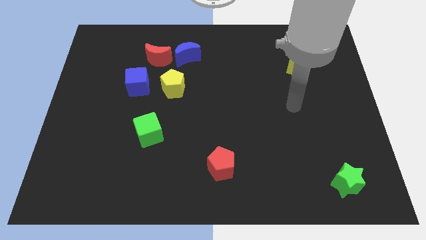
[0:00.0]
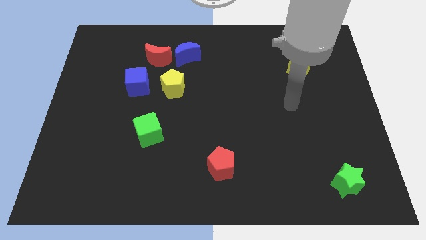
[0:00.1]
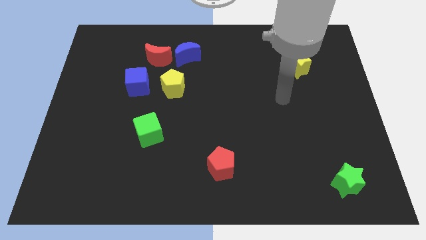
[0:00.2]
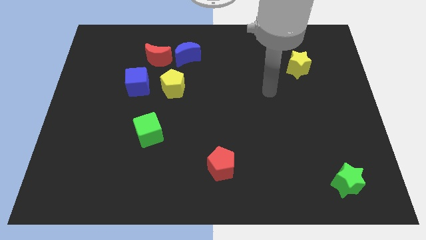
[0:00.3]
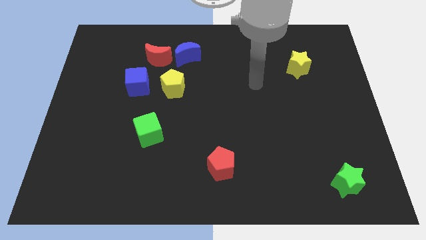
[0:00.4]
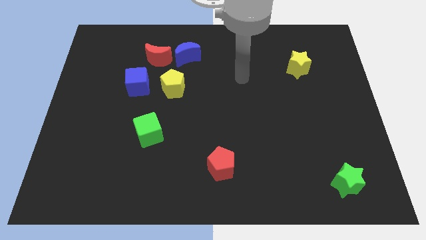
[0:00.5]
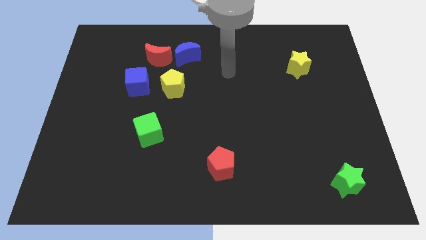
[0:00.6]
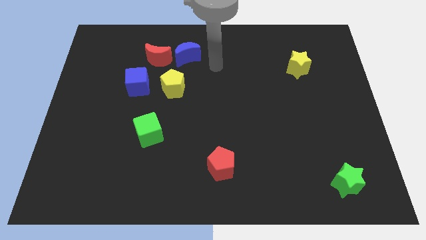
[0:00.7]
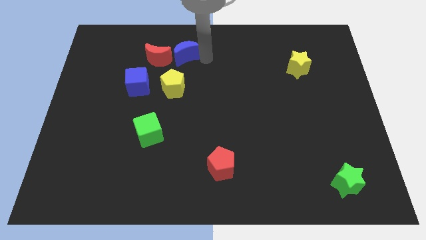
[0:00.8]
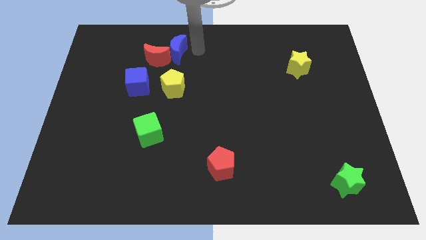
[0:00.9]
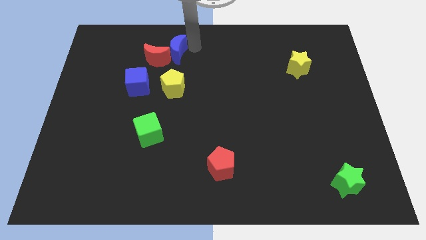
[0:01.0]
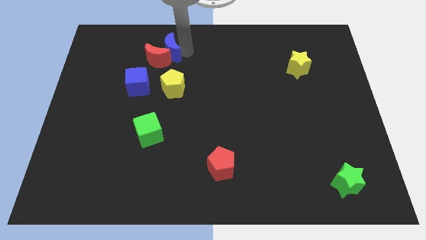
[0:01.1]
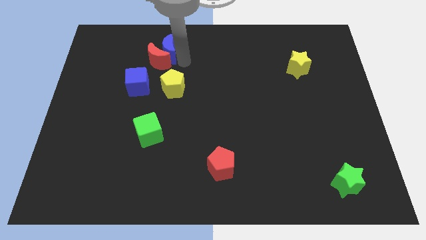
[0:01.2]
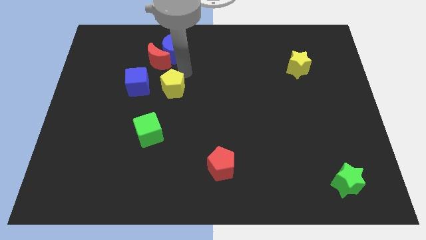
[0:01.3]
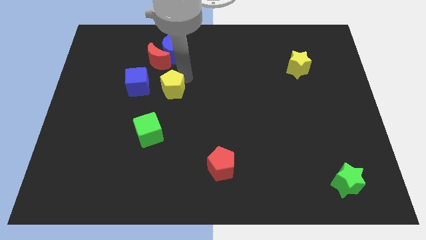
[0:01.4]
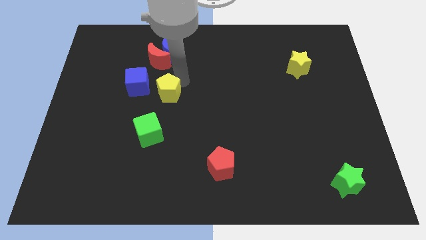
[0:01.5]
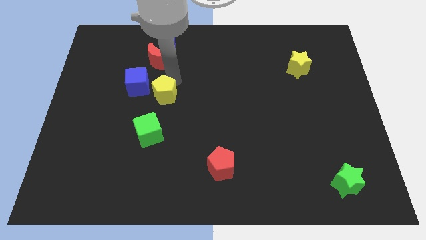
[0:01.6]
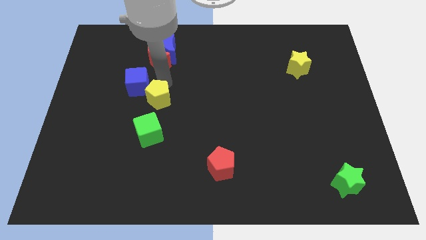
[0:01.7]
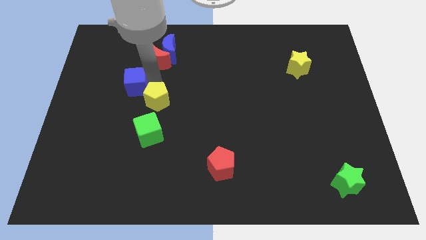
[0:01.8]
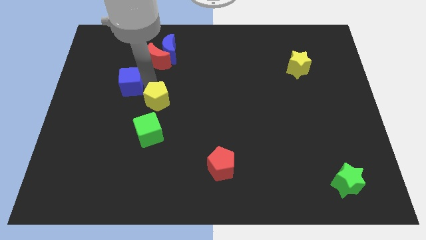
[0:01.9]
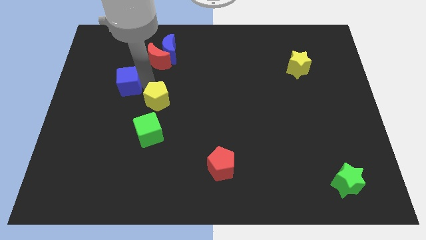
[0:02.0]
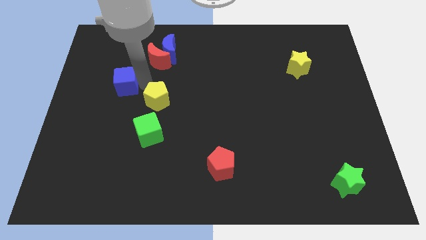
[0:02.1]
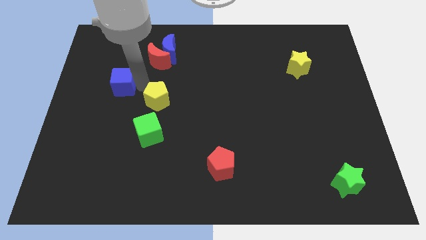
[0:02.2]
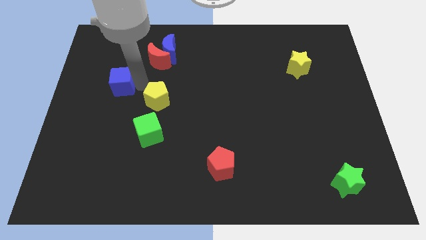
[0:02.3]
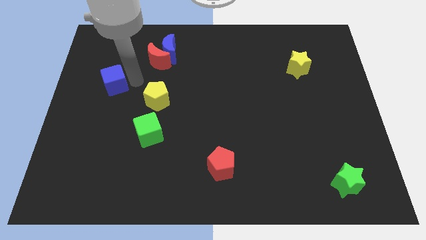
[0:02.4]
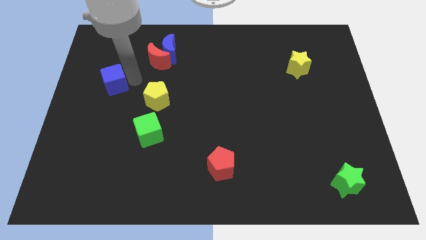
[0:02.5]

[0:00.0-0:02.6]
move blue cube towards the left

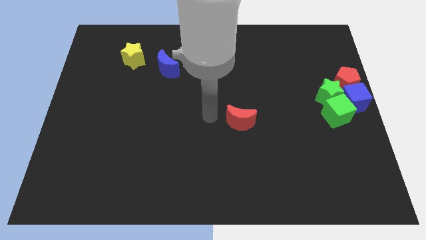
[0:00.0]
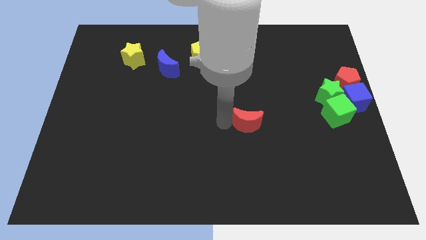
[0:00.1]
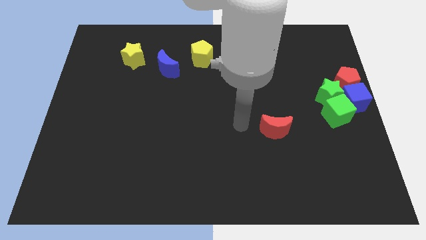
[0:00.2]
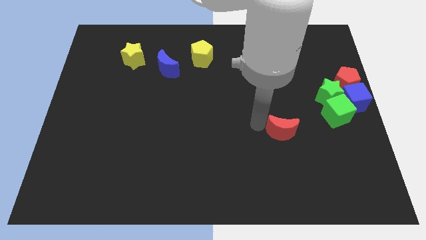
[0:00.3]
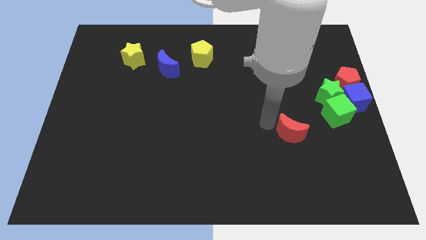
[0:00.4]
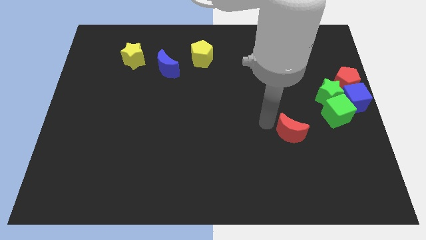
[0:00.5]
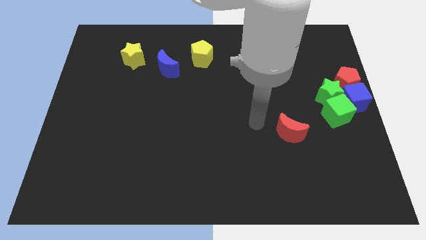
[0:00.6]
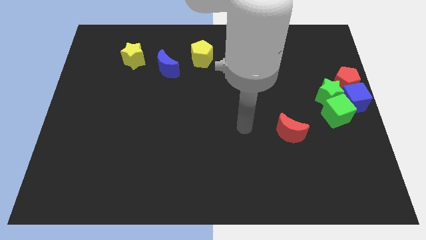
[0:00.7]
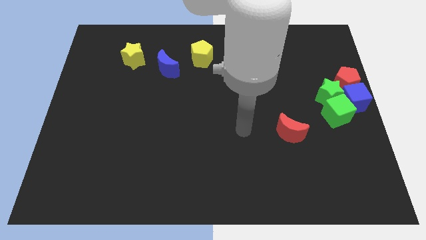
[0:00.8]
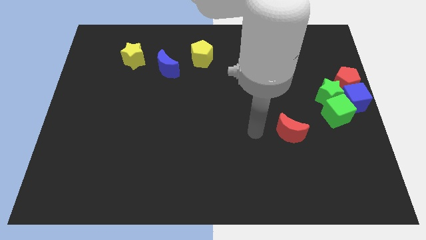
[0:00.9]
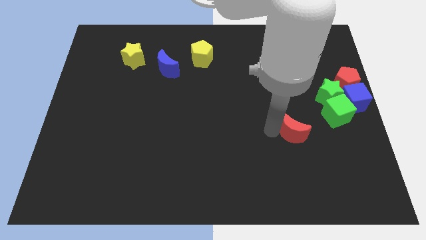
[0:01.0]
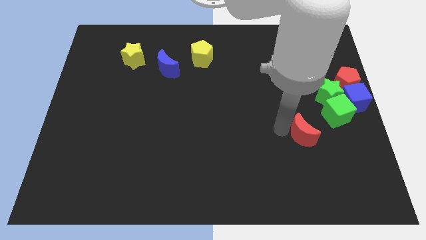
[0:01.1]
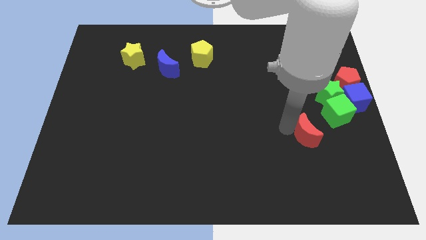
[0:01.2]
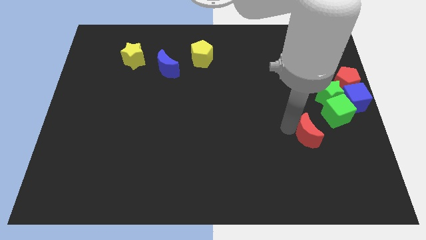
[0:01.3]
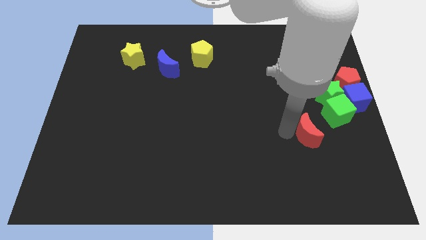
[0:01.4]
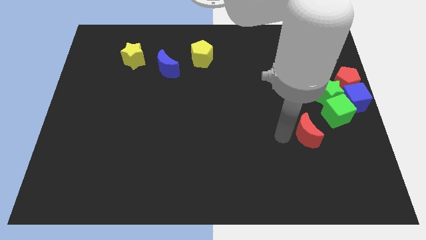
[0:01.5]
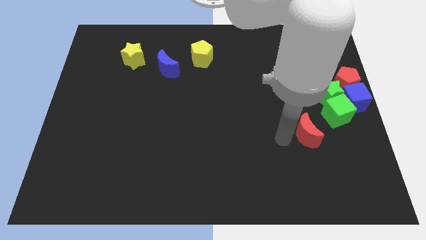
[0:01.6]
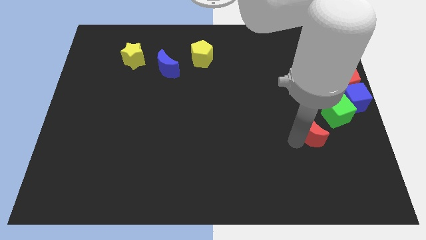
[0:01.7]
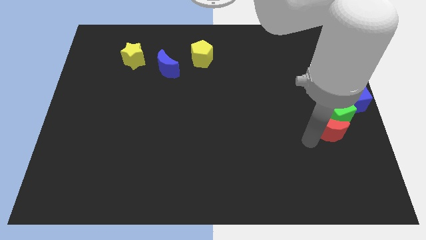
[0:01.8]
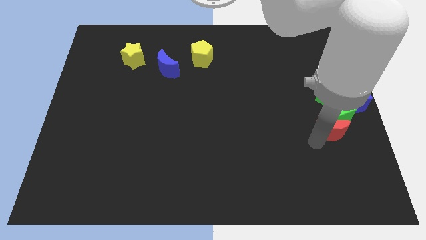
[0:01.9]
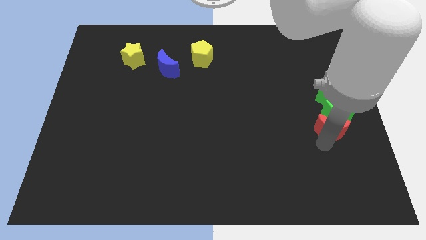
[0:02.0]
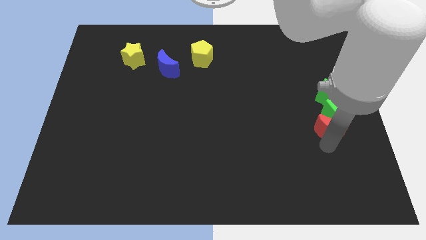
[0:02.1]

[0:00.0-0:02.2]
move the red crescent closer to the green cube

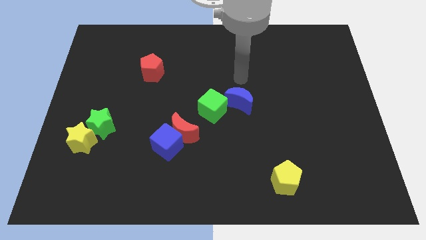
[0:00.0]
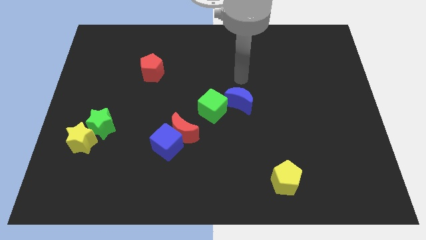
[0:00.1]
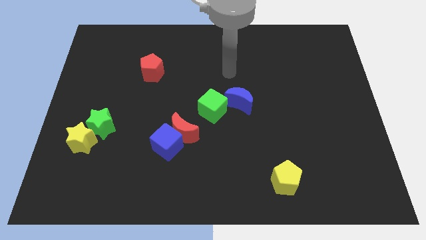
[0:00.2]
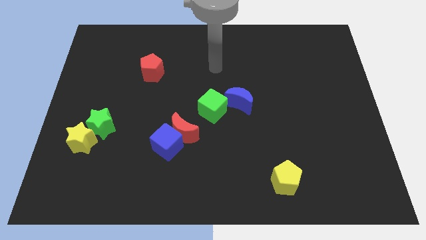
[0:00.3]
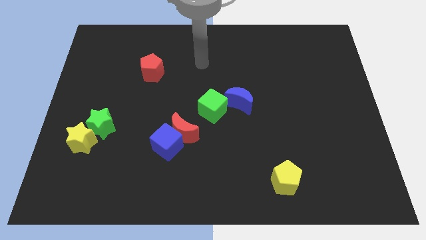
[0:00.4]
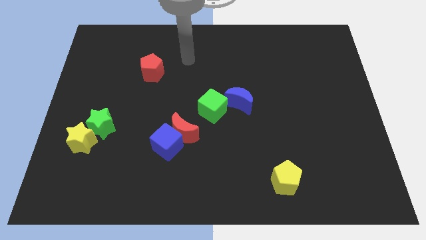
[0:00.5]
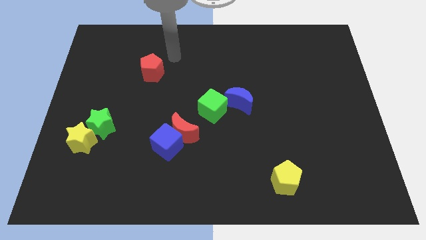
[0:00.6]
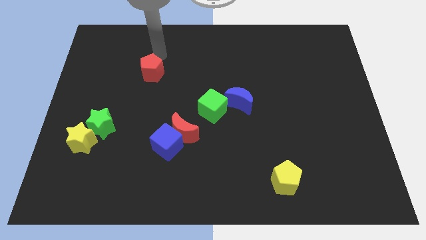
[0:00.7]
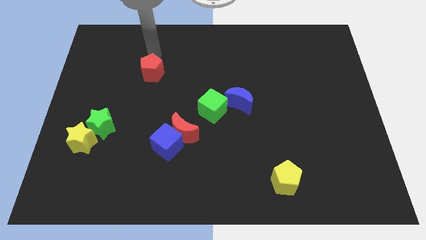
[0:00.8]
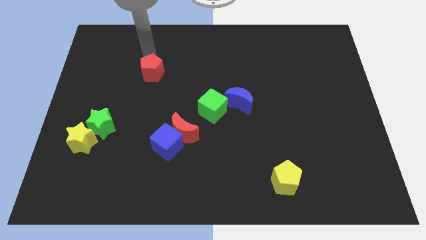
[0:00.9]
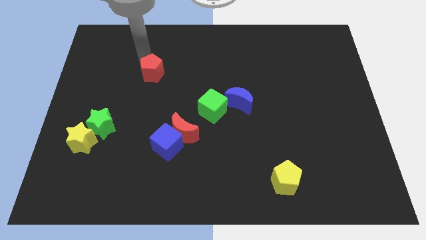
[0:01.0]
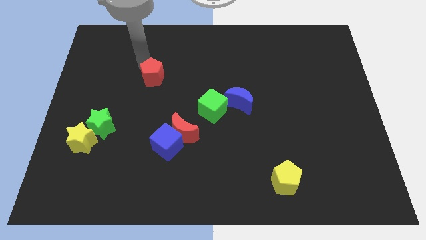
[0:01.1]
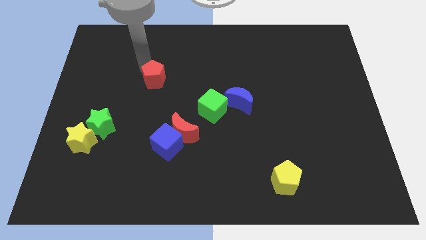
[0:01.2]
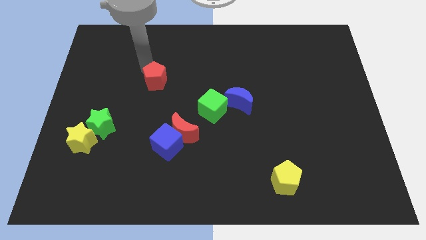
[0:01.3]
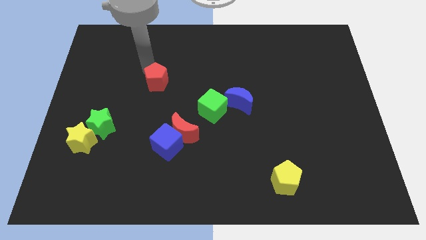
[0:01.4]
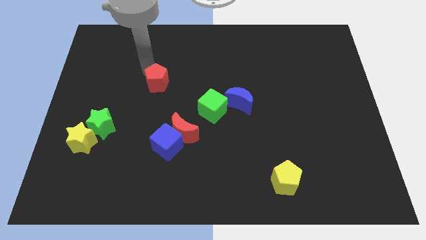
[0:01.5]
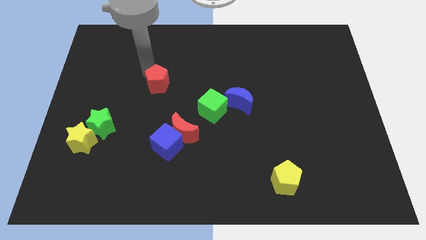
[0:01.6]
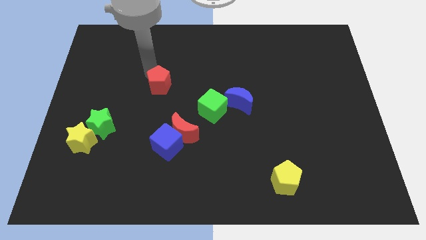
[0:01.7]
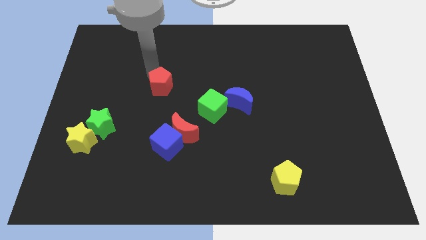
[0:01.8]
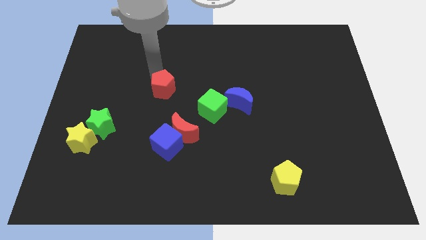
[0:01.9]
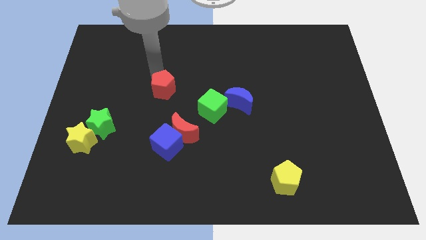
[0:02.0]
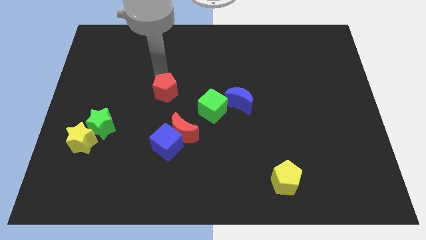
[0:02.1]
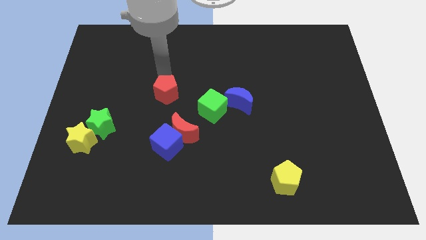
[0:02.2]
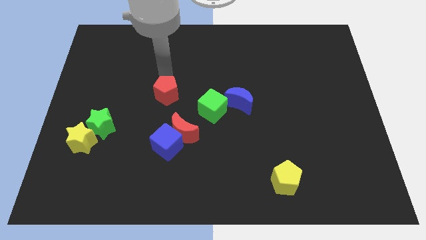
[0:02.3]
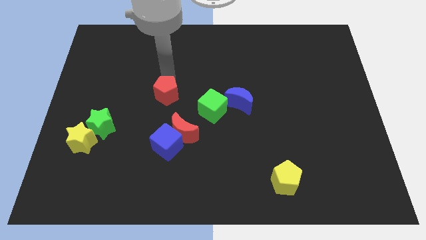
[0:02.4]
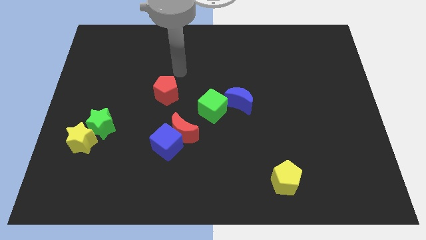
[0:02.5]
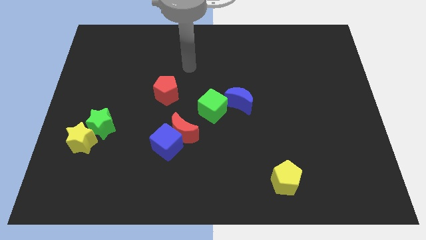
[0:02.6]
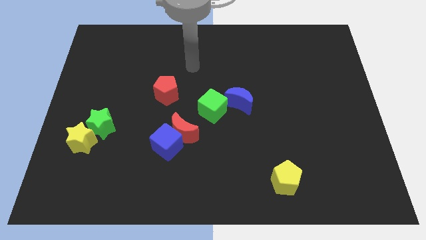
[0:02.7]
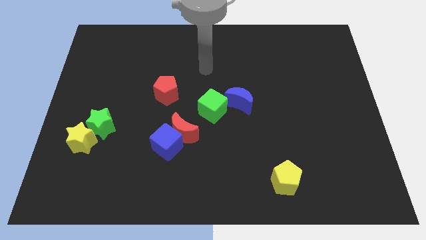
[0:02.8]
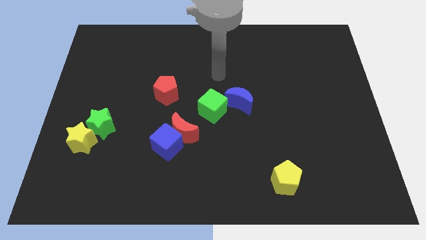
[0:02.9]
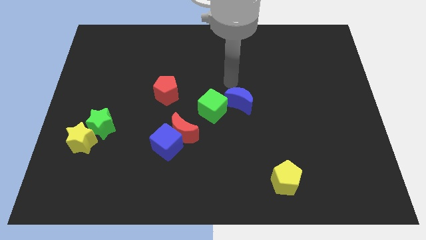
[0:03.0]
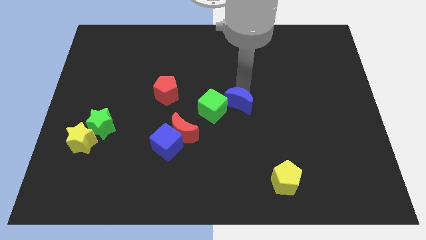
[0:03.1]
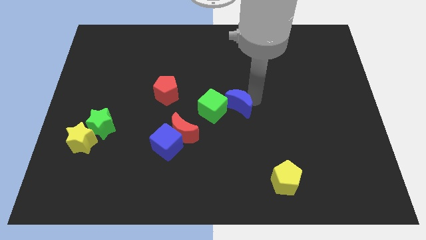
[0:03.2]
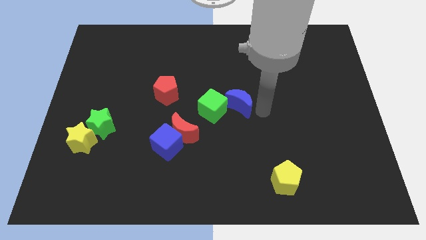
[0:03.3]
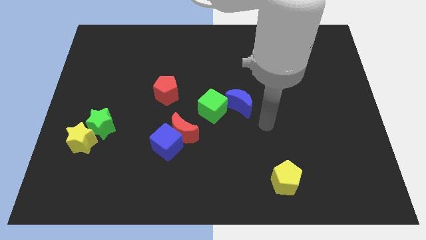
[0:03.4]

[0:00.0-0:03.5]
move red pentagon slightly towards the red crescent

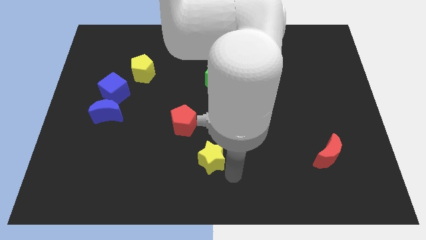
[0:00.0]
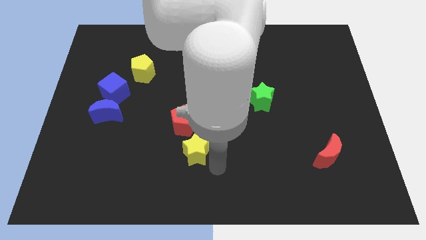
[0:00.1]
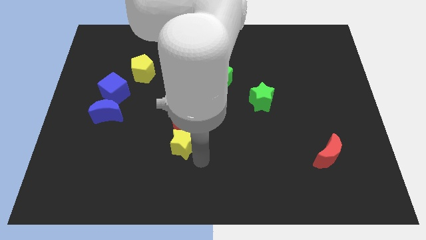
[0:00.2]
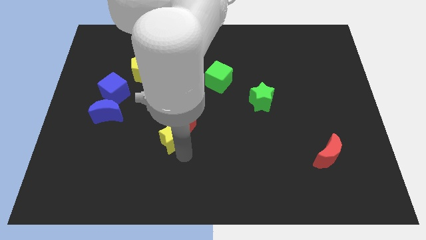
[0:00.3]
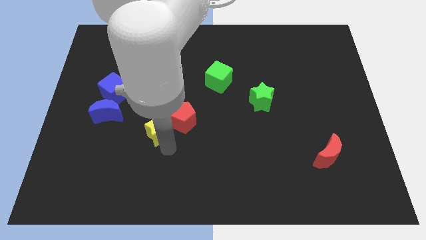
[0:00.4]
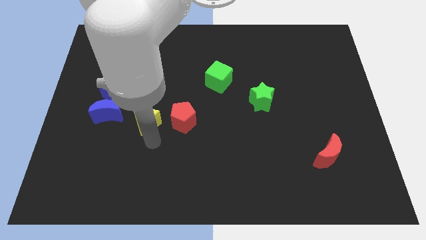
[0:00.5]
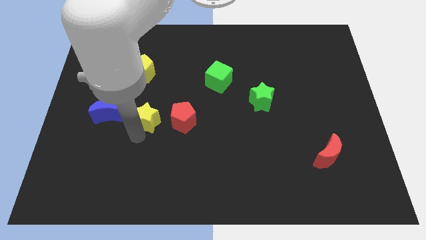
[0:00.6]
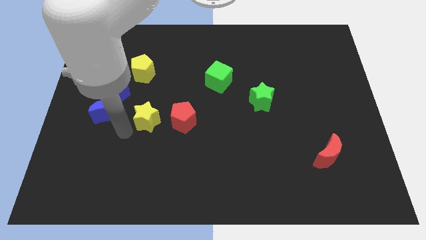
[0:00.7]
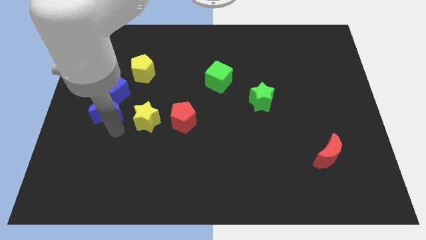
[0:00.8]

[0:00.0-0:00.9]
push the yellow star in between the red pentagon and blue crescent
